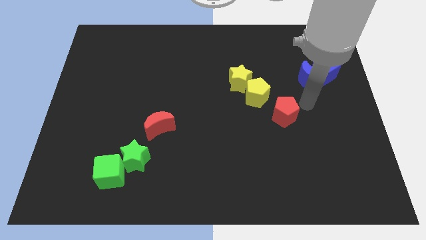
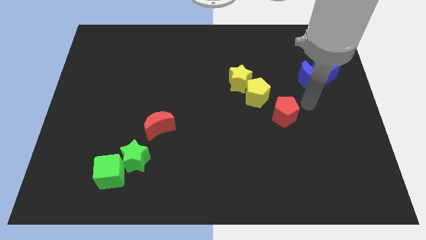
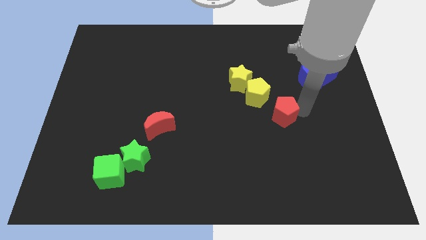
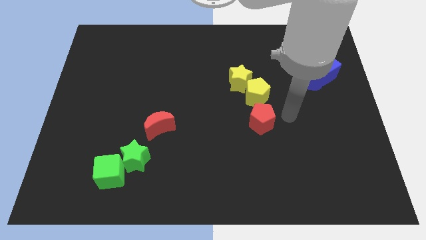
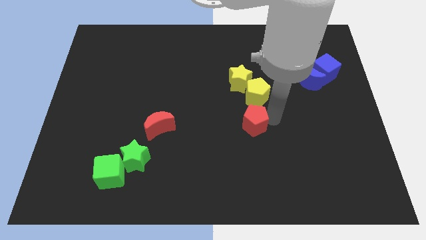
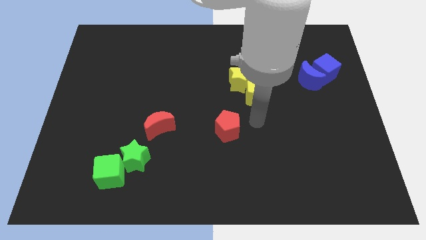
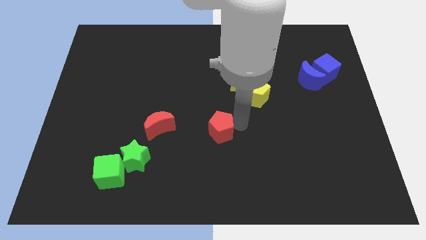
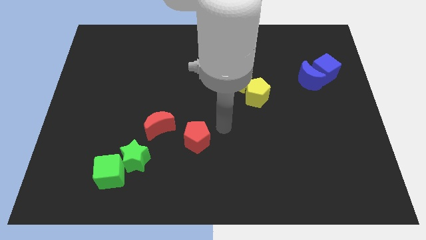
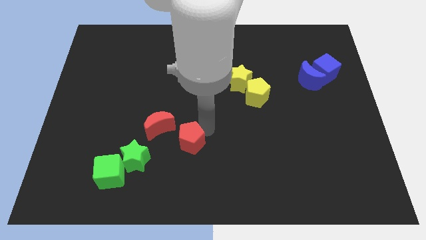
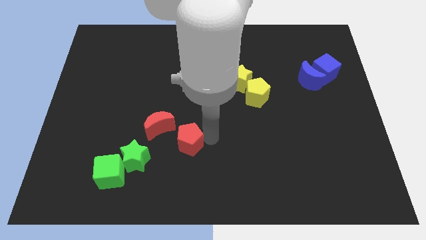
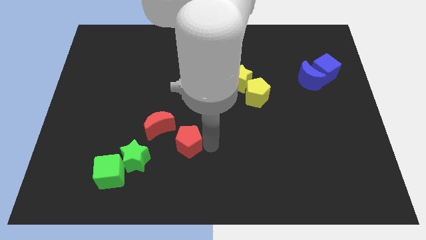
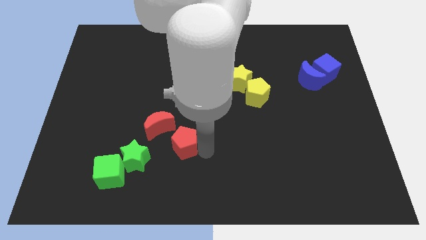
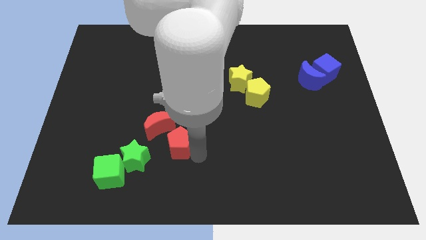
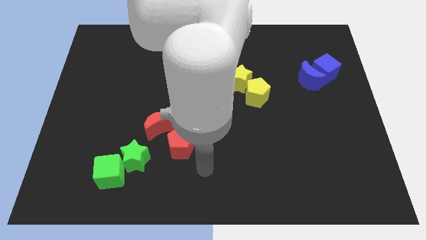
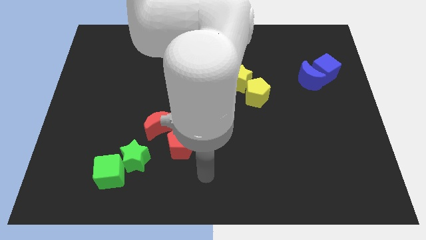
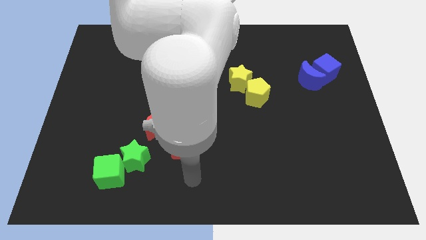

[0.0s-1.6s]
push the red pentagon to the bottom right of red moon

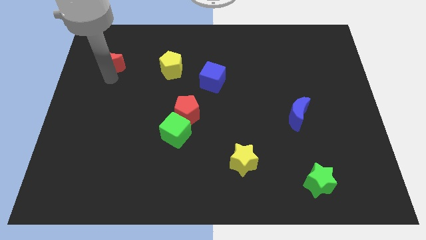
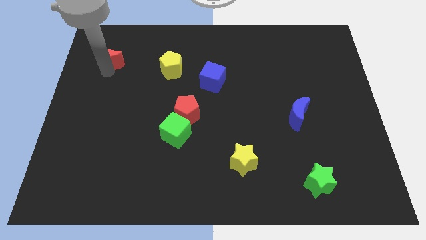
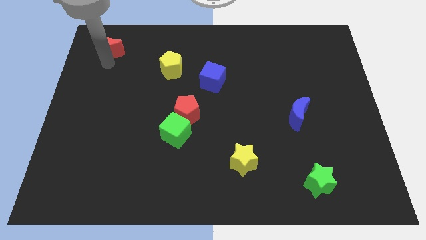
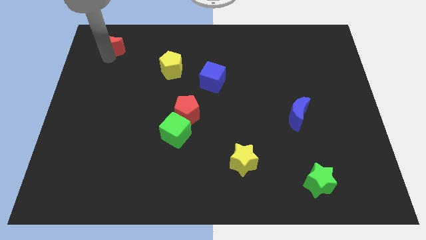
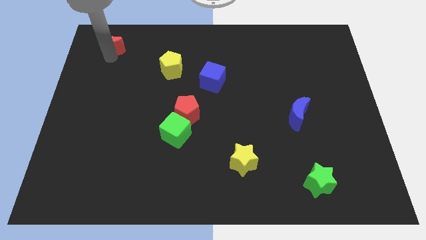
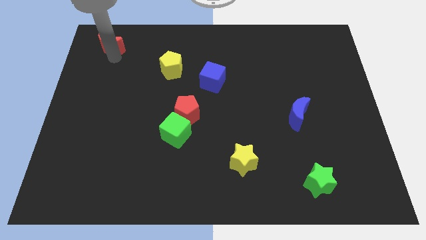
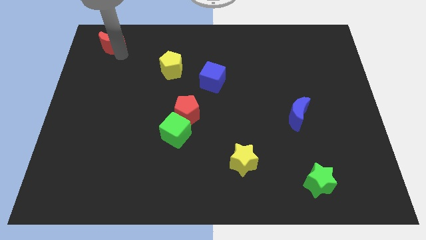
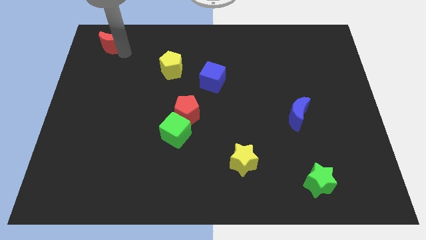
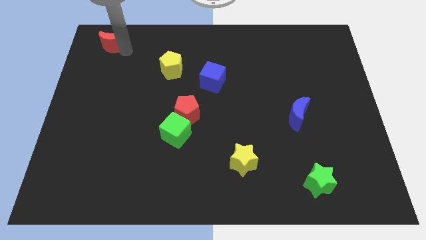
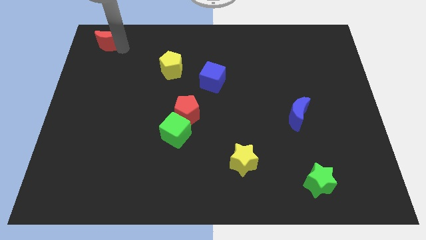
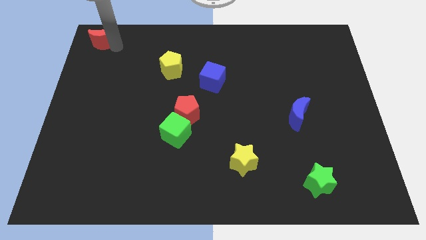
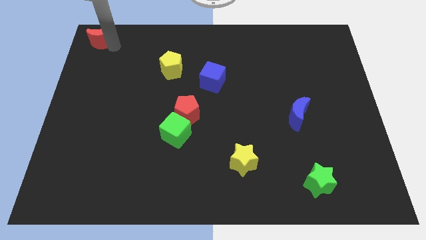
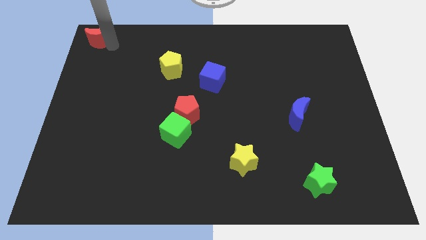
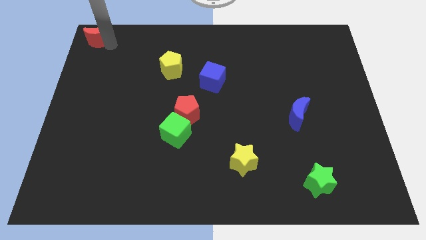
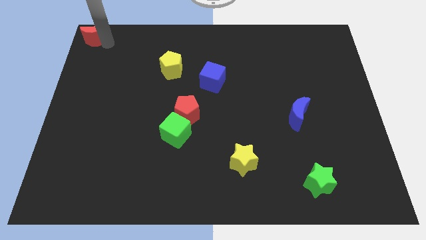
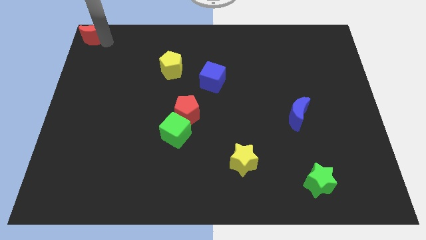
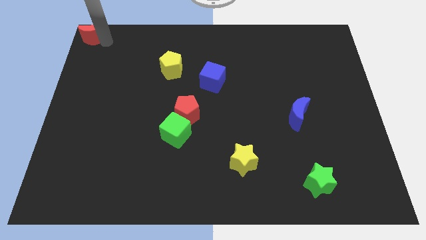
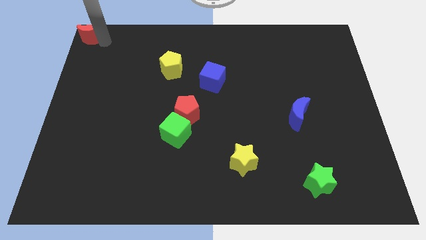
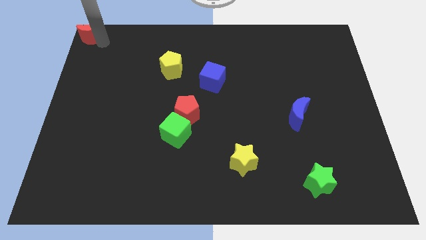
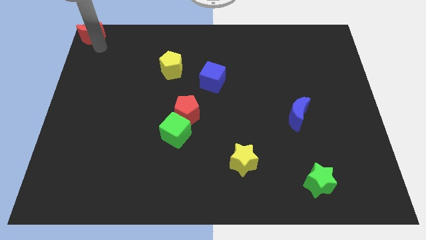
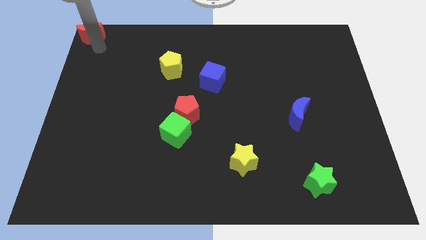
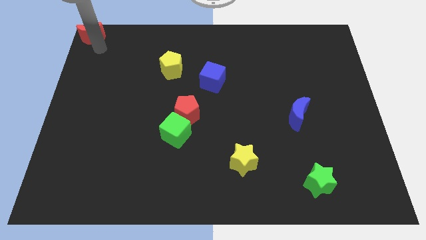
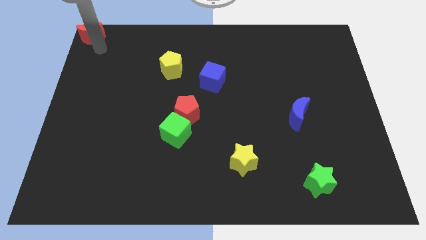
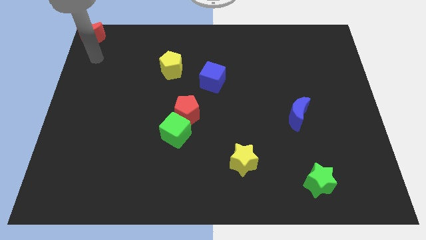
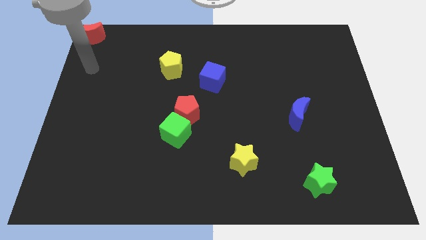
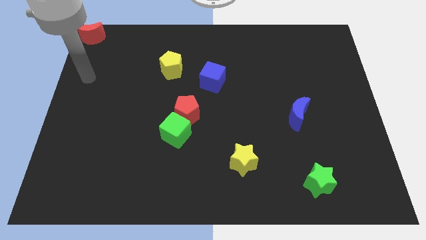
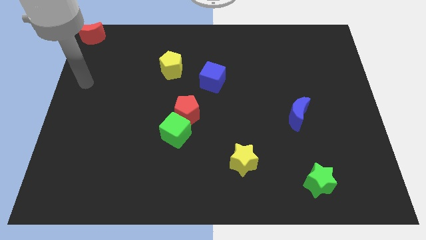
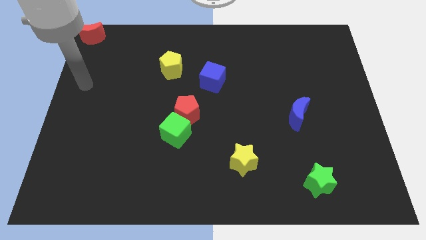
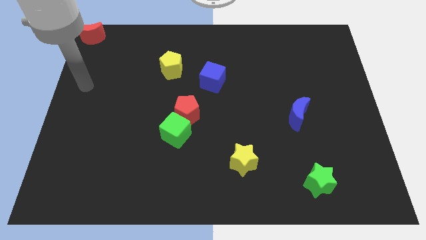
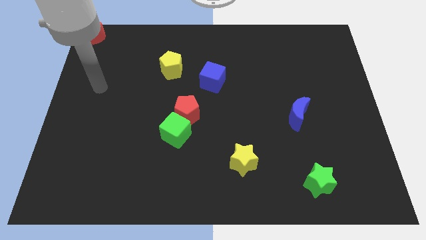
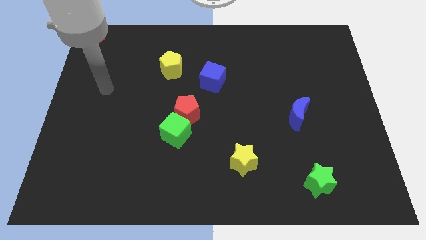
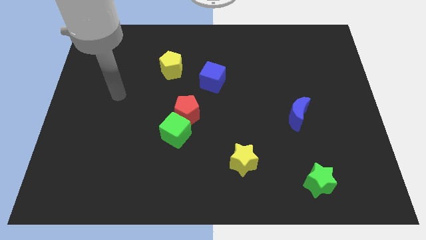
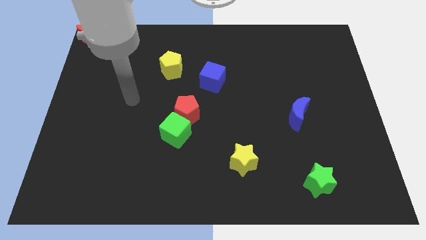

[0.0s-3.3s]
place the red crescent at the top left corner of the board

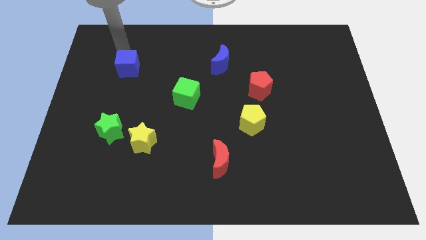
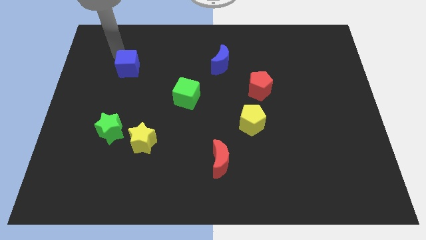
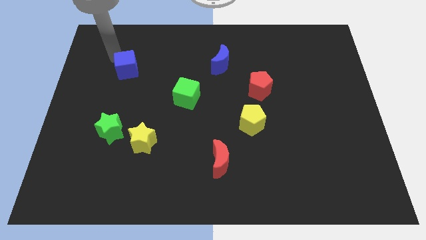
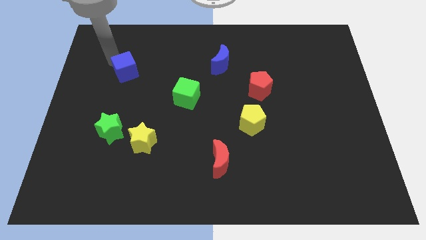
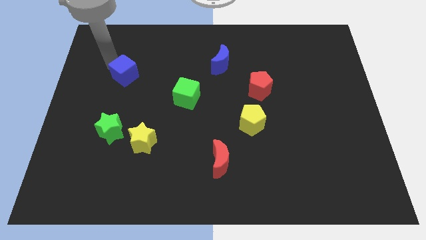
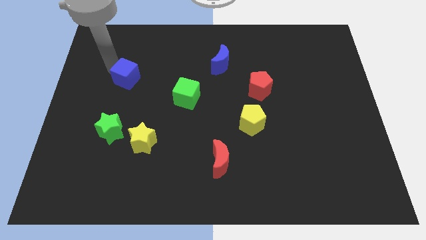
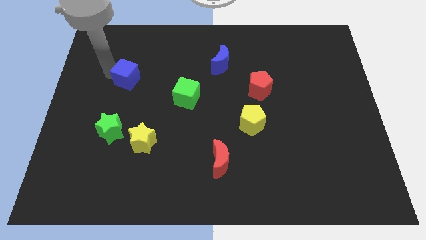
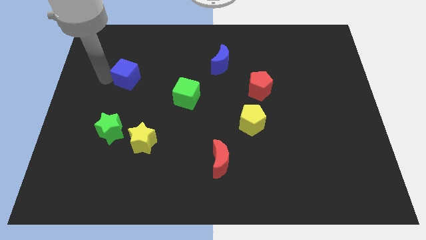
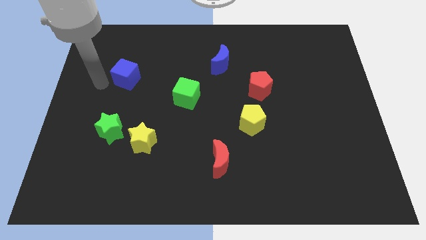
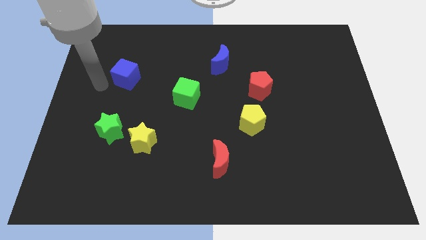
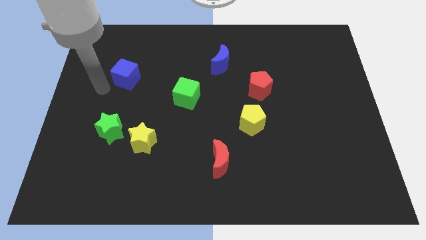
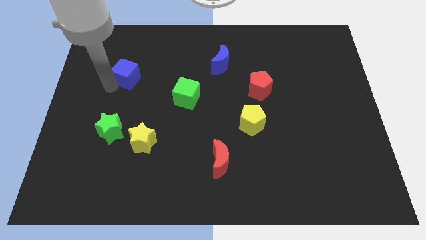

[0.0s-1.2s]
move blue cube slightly down

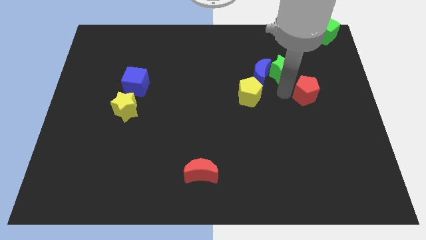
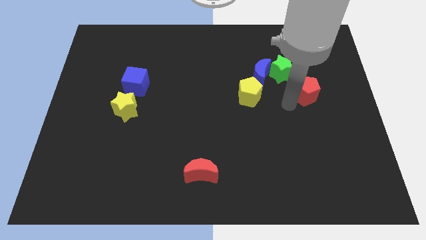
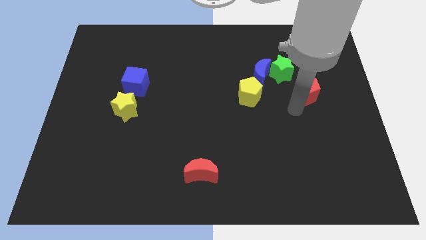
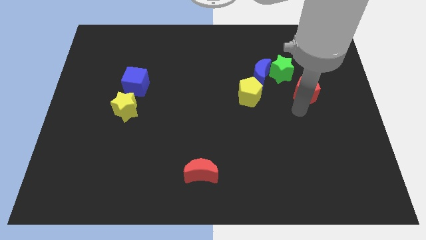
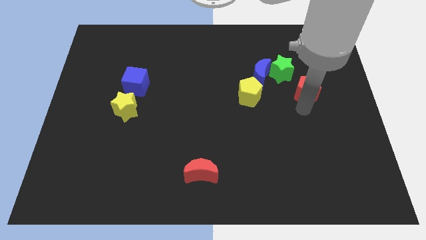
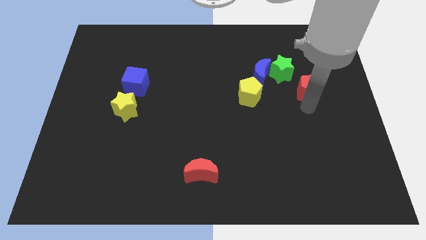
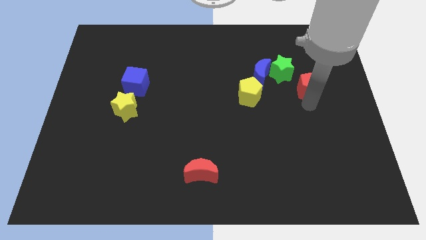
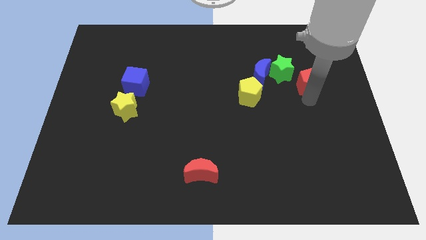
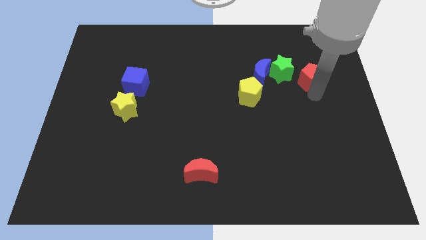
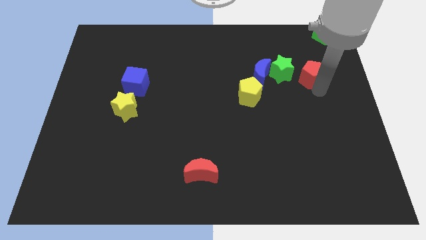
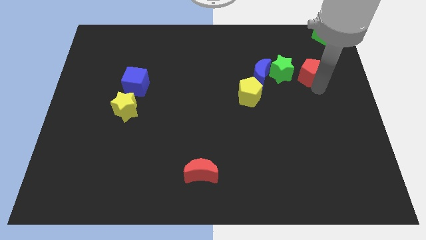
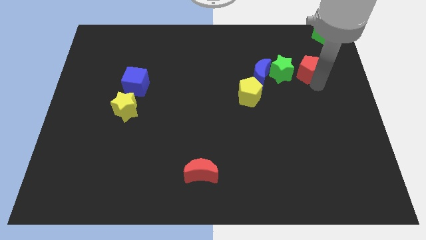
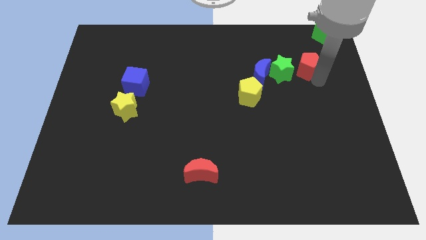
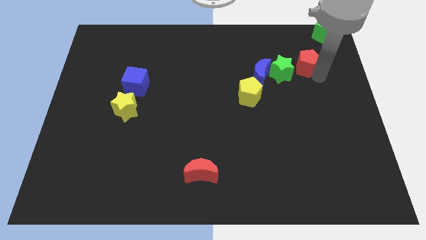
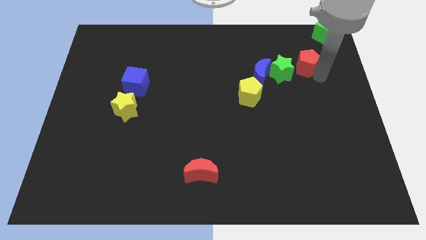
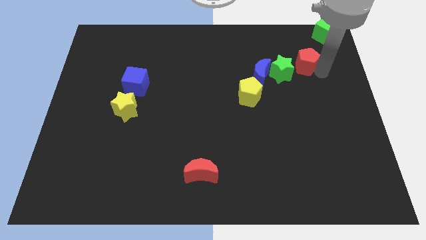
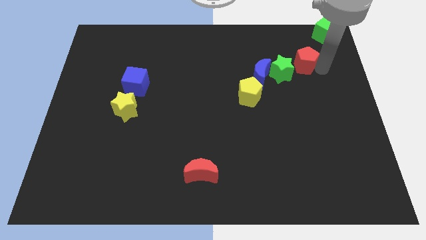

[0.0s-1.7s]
put the red pentagon right to the green star

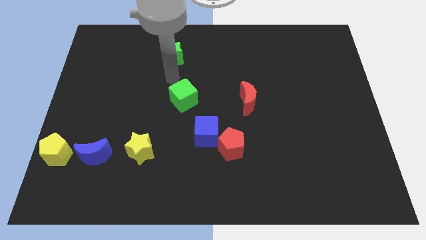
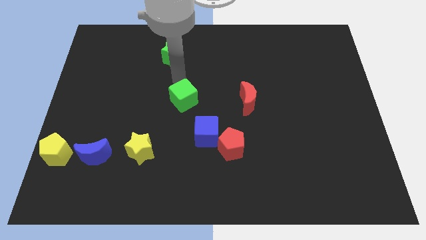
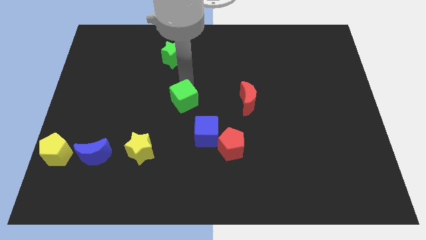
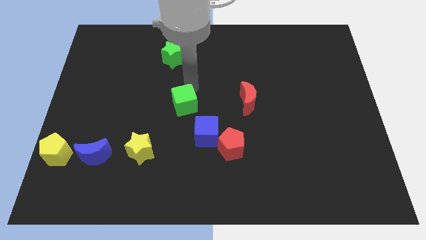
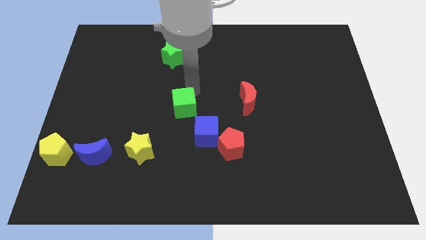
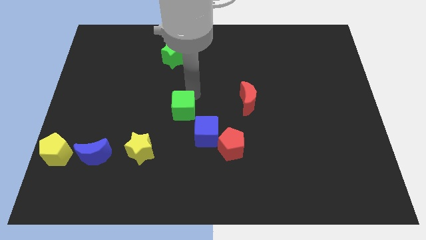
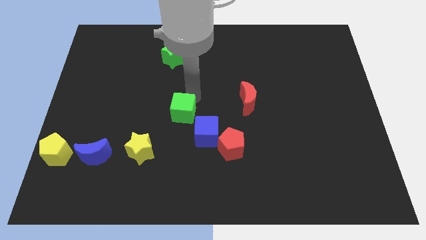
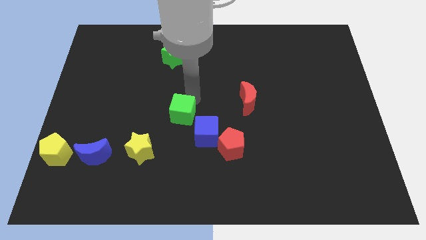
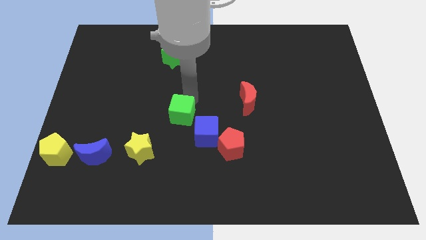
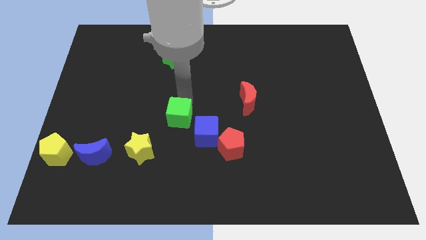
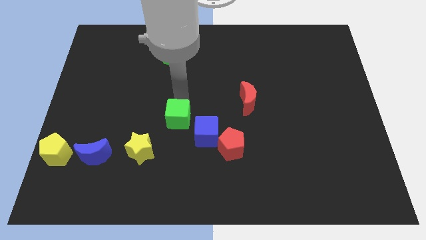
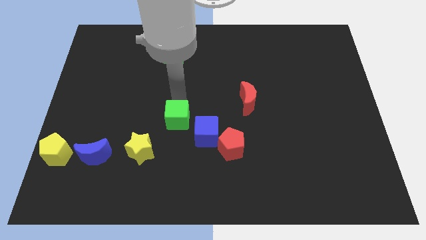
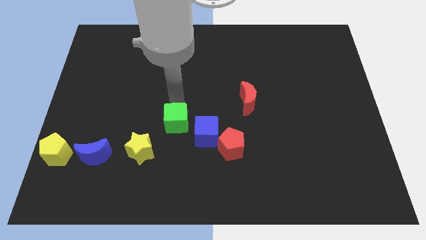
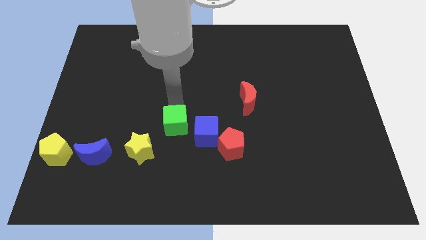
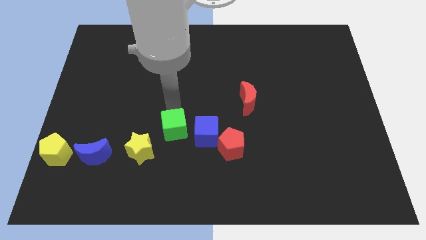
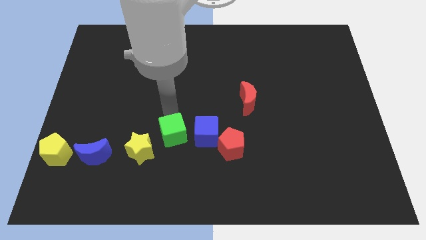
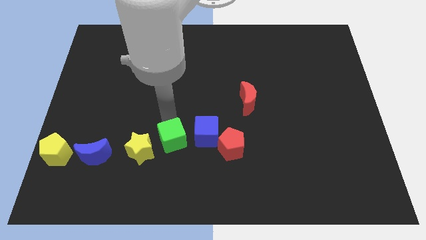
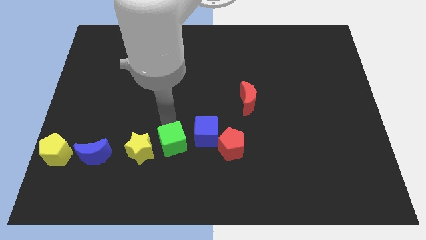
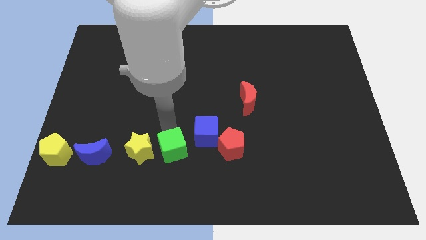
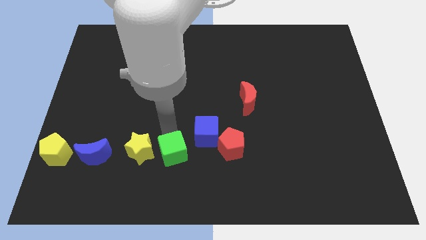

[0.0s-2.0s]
move the green cube to the right of the yellow star
